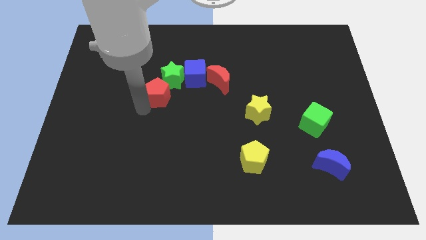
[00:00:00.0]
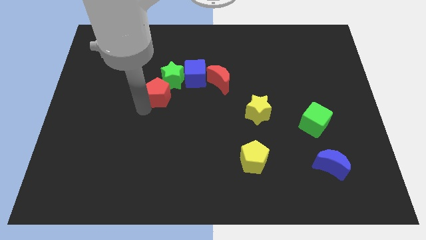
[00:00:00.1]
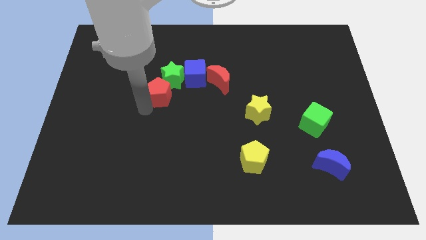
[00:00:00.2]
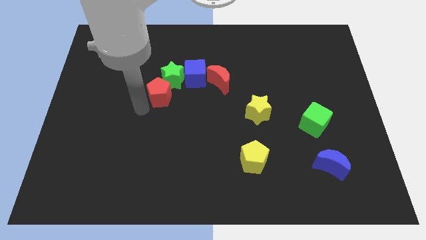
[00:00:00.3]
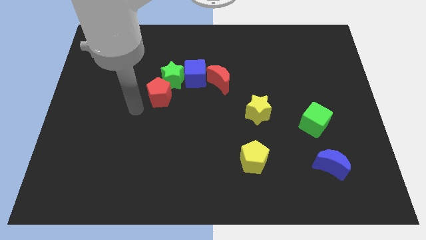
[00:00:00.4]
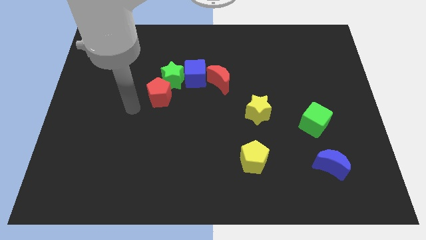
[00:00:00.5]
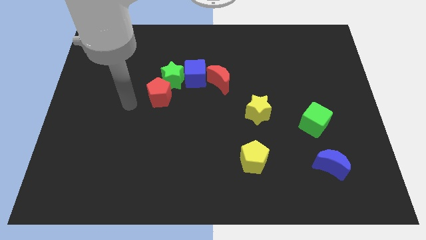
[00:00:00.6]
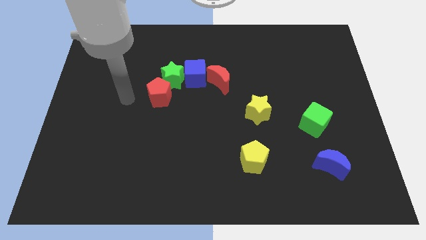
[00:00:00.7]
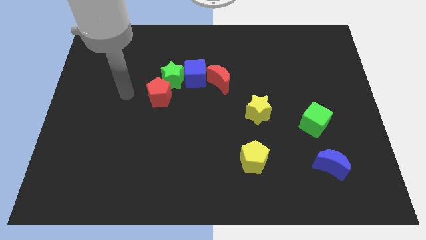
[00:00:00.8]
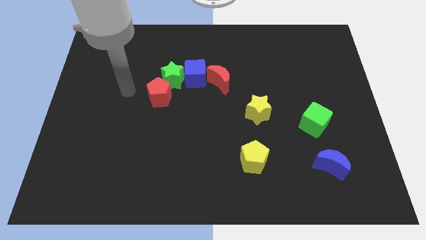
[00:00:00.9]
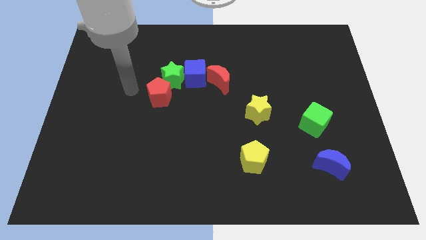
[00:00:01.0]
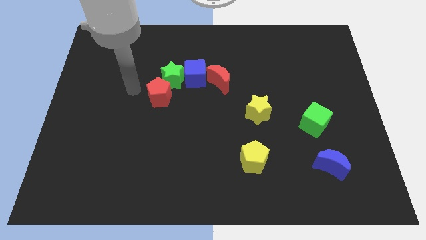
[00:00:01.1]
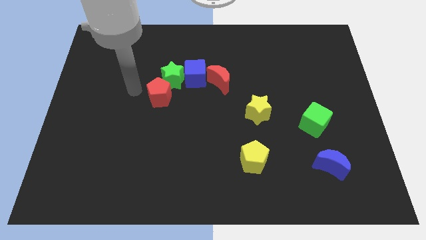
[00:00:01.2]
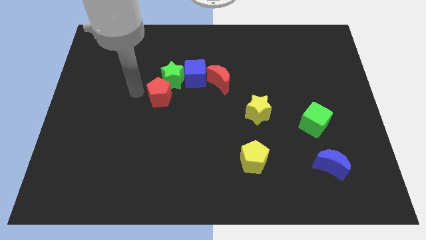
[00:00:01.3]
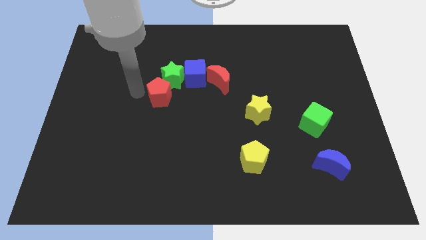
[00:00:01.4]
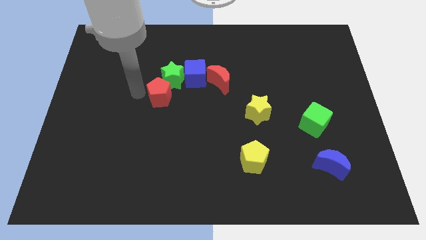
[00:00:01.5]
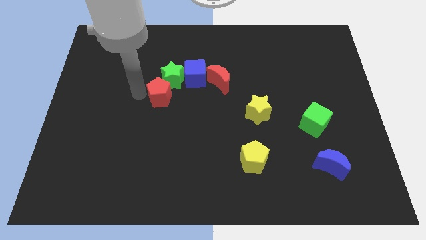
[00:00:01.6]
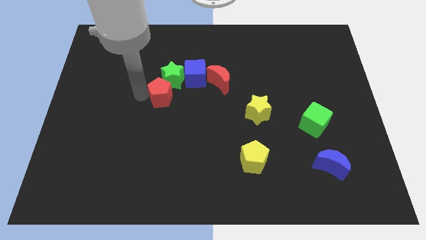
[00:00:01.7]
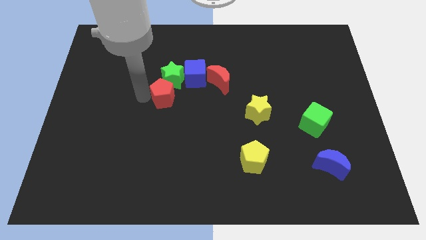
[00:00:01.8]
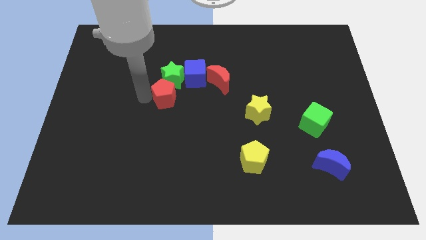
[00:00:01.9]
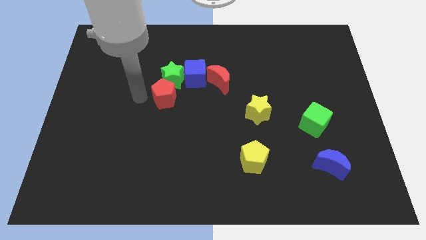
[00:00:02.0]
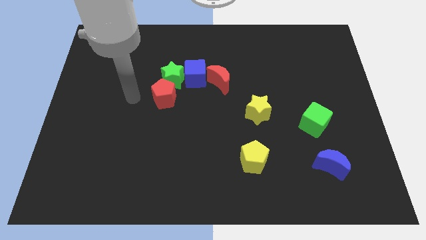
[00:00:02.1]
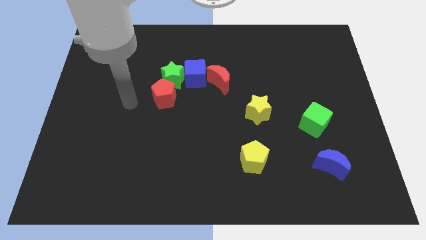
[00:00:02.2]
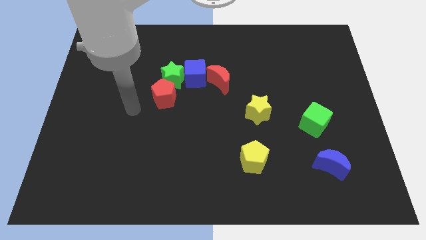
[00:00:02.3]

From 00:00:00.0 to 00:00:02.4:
push the red pentagon diagonally below to the green star

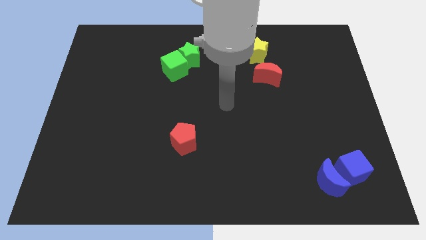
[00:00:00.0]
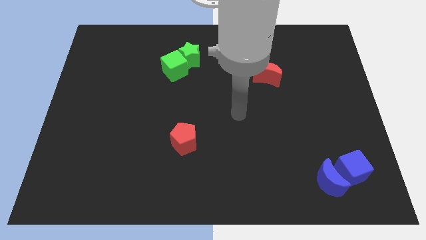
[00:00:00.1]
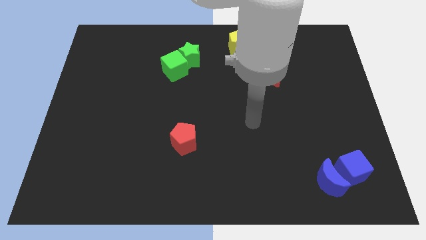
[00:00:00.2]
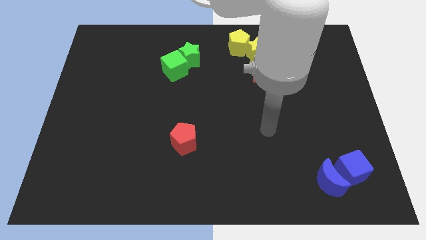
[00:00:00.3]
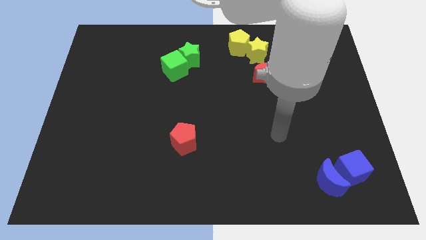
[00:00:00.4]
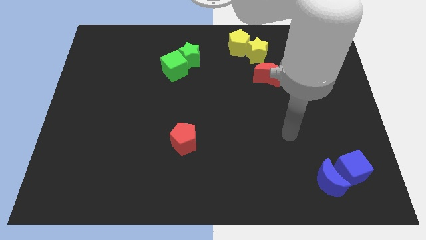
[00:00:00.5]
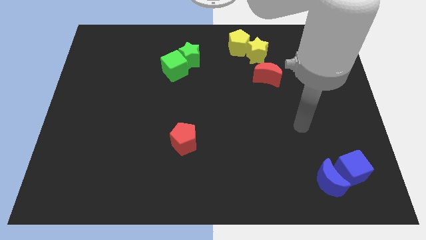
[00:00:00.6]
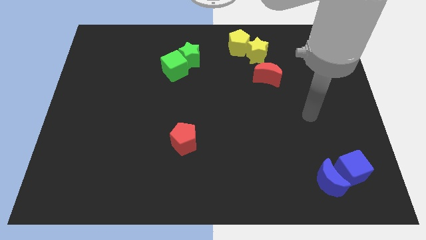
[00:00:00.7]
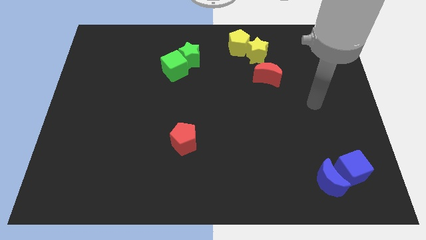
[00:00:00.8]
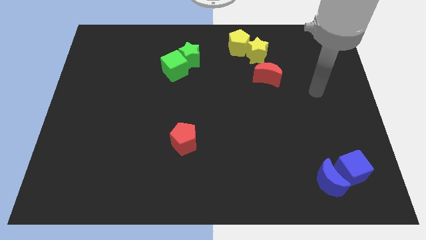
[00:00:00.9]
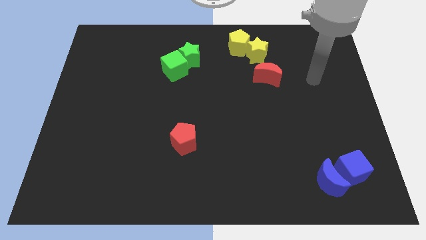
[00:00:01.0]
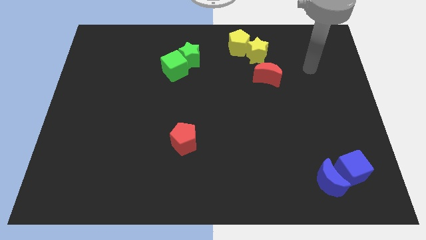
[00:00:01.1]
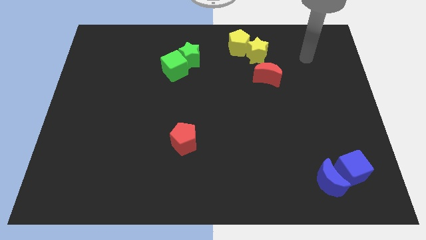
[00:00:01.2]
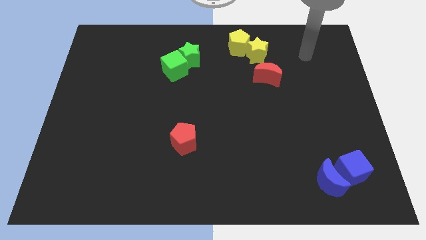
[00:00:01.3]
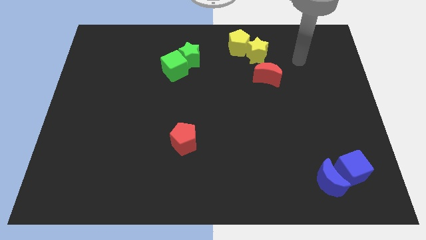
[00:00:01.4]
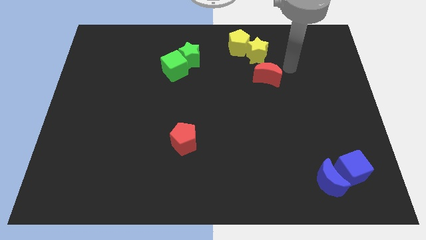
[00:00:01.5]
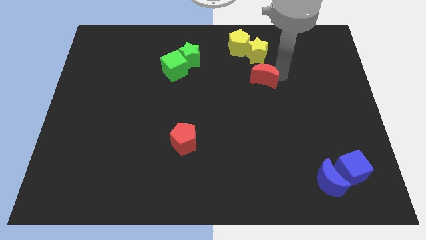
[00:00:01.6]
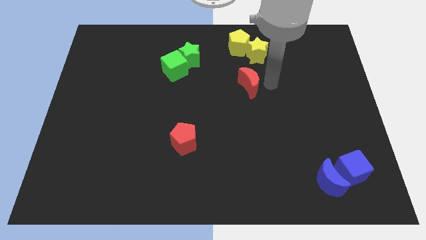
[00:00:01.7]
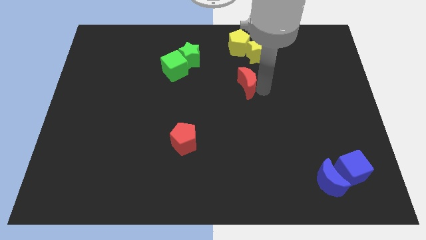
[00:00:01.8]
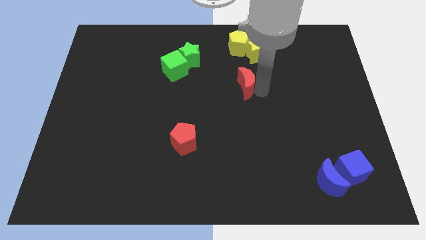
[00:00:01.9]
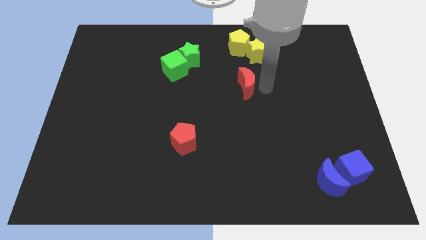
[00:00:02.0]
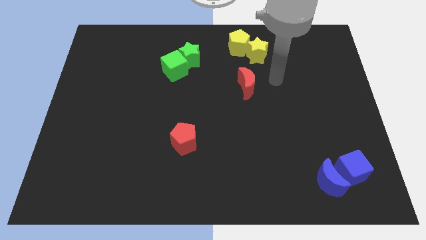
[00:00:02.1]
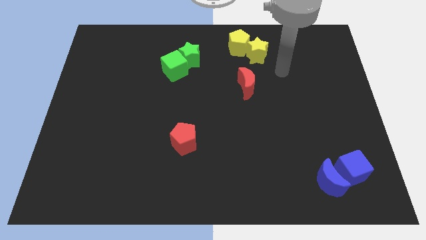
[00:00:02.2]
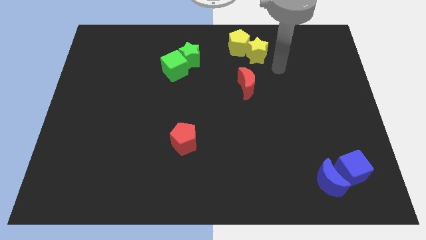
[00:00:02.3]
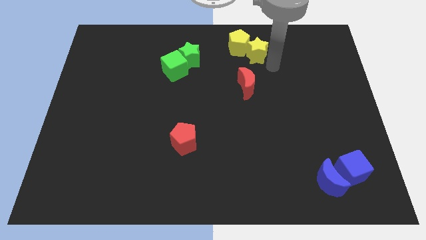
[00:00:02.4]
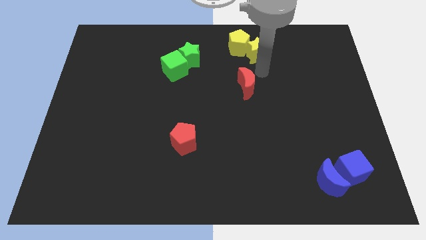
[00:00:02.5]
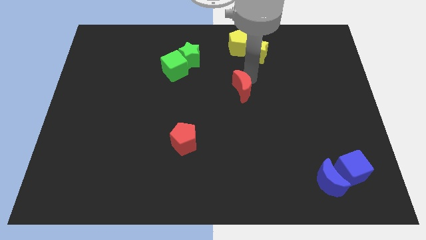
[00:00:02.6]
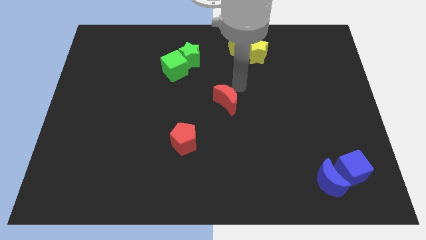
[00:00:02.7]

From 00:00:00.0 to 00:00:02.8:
put the red moon in between the group of green blocks and group of blue blocks

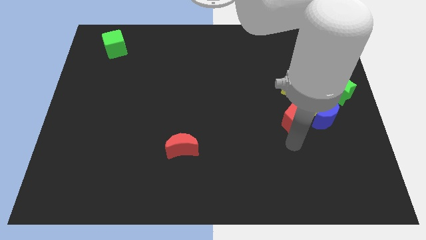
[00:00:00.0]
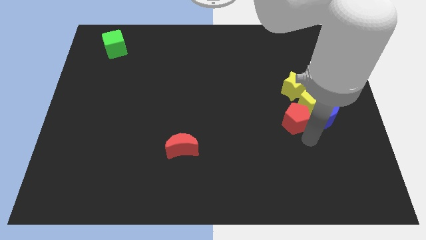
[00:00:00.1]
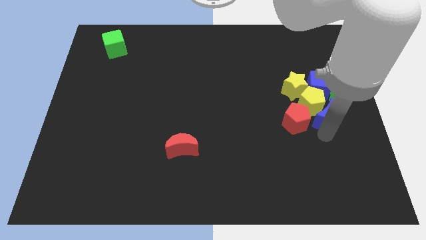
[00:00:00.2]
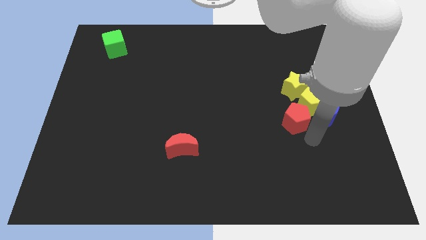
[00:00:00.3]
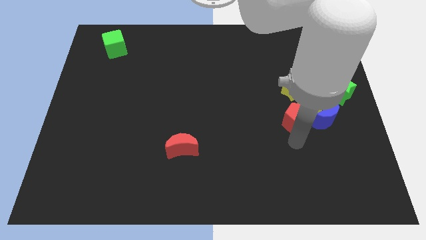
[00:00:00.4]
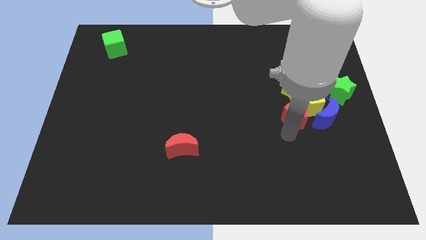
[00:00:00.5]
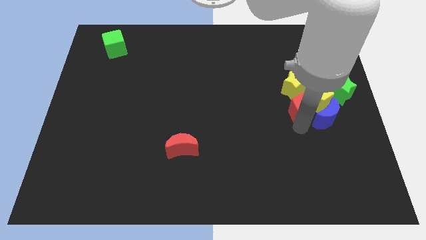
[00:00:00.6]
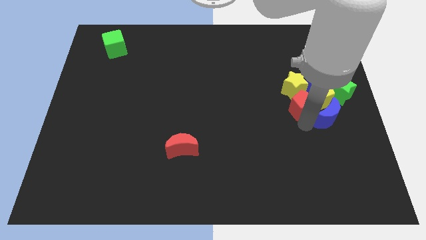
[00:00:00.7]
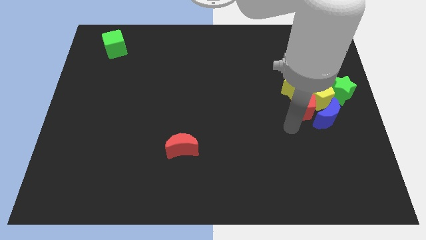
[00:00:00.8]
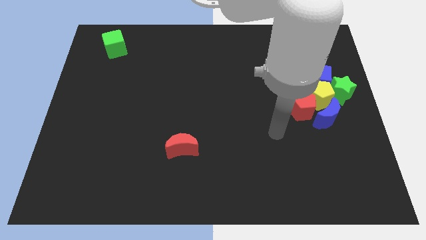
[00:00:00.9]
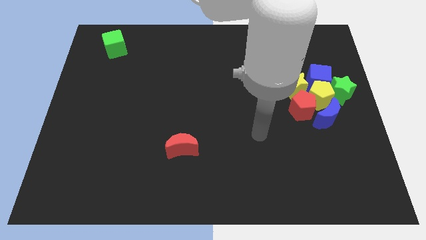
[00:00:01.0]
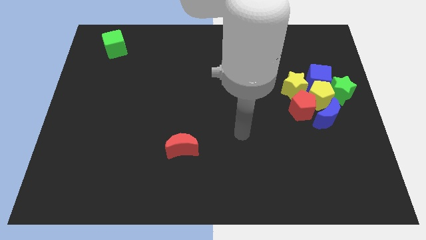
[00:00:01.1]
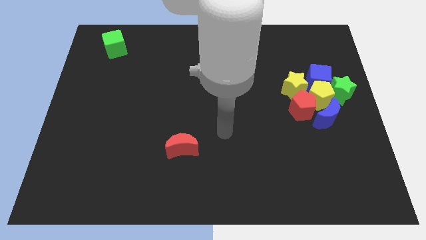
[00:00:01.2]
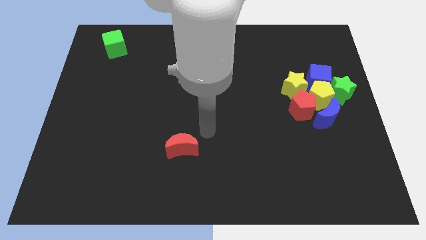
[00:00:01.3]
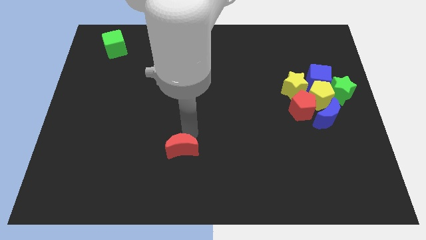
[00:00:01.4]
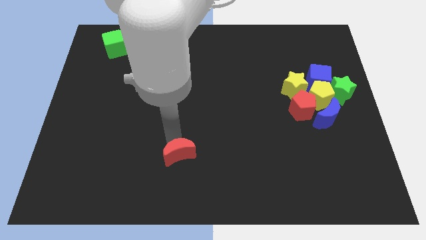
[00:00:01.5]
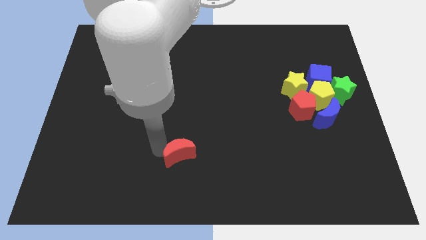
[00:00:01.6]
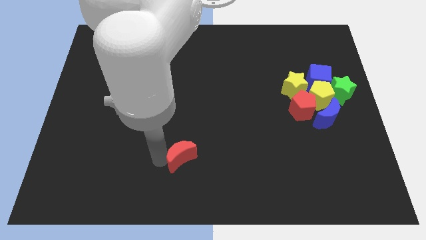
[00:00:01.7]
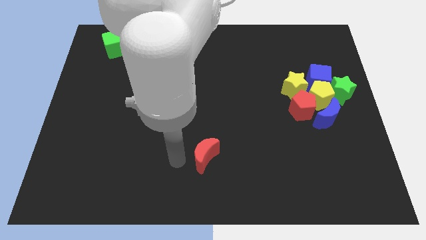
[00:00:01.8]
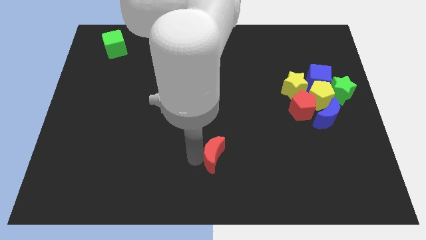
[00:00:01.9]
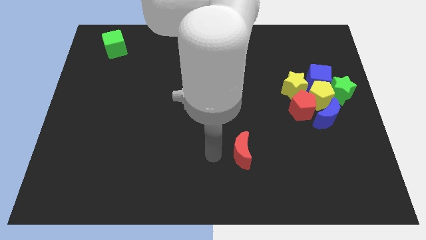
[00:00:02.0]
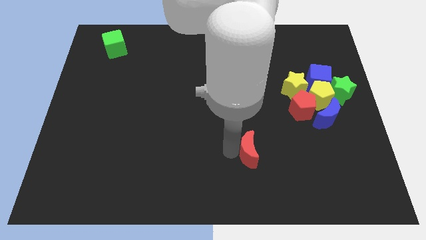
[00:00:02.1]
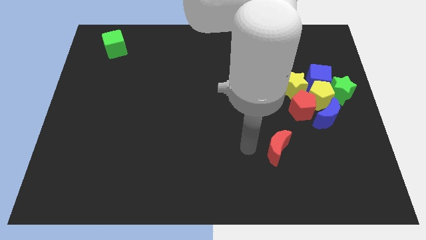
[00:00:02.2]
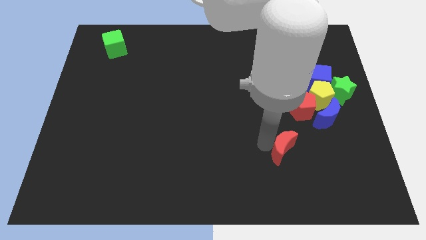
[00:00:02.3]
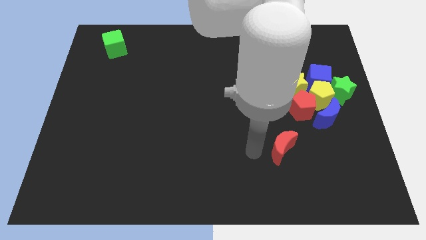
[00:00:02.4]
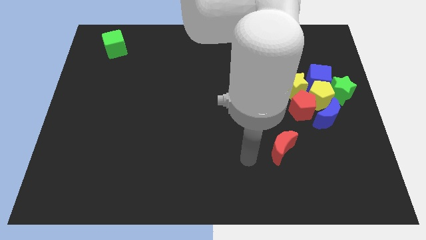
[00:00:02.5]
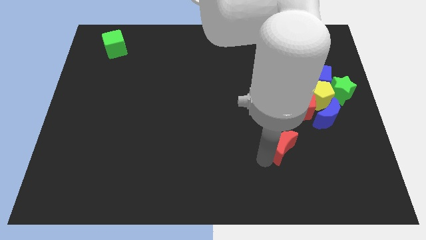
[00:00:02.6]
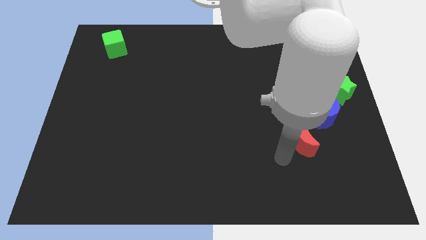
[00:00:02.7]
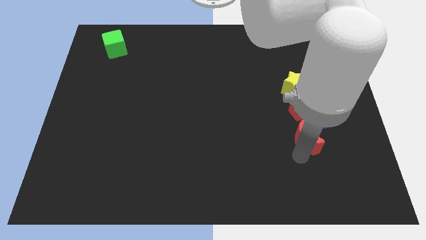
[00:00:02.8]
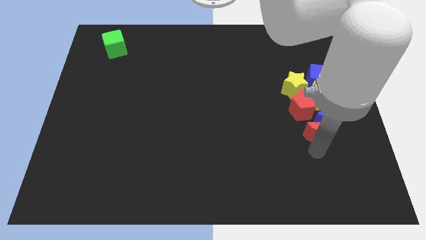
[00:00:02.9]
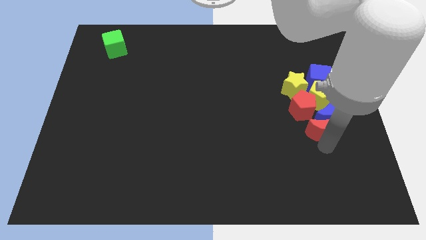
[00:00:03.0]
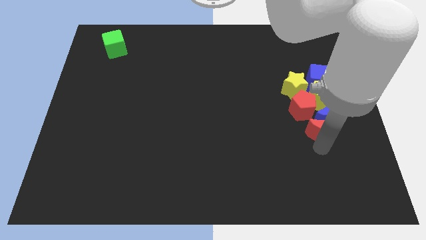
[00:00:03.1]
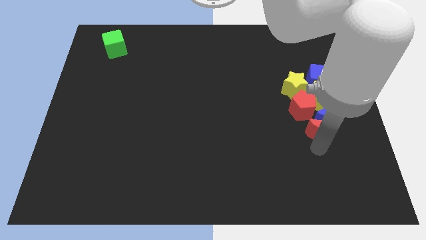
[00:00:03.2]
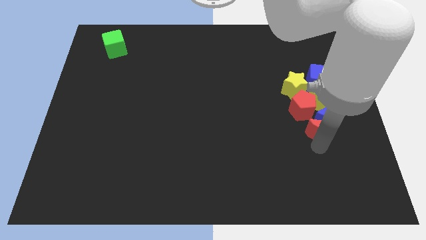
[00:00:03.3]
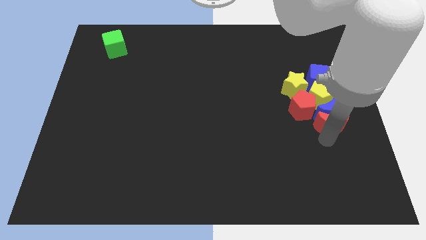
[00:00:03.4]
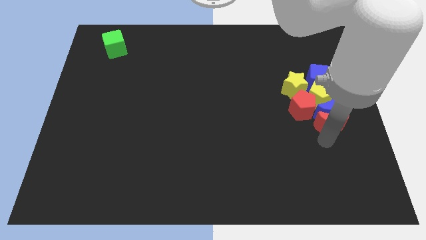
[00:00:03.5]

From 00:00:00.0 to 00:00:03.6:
move the red moon into the bottom of the blue moon

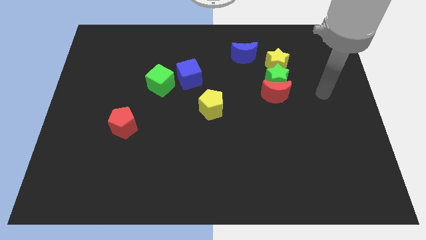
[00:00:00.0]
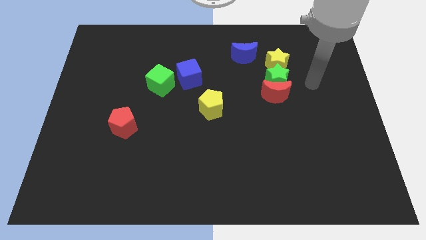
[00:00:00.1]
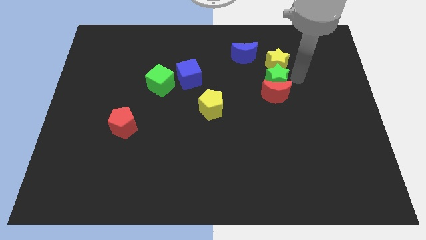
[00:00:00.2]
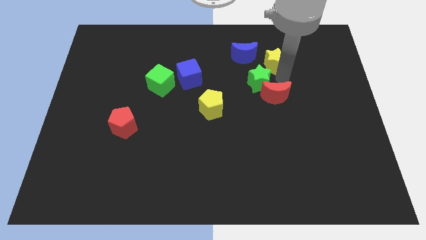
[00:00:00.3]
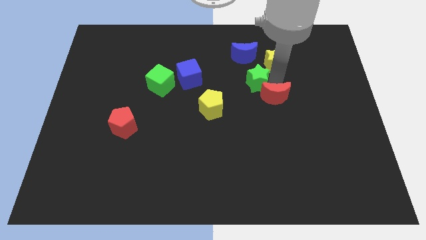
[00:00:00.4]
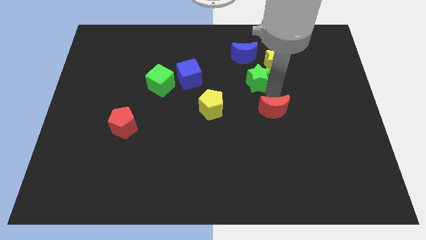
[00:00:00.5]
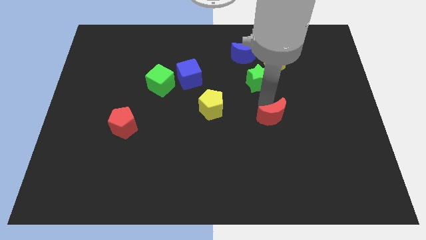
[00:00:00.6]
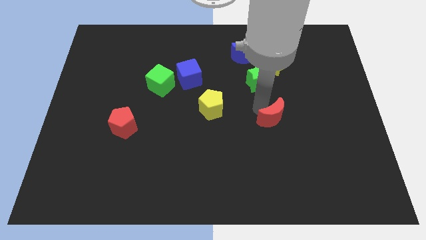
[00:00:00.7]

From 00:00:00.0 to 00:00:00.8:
seperate green star from yellow star
